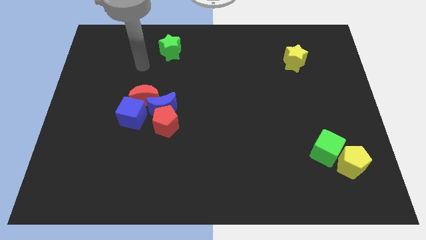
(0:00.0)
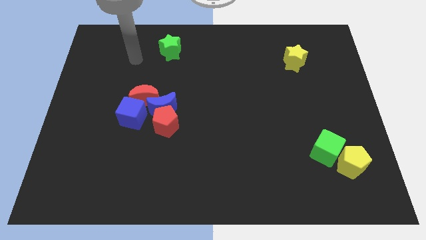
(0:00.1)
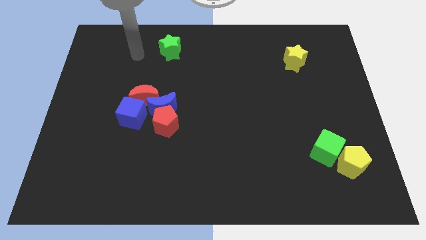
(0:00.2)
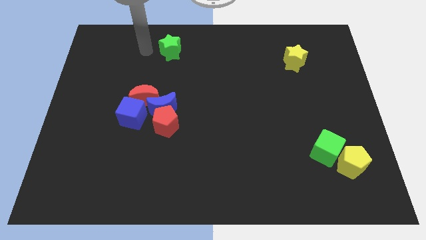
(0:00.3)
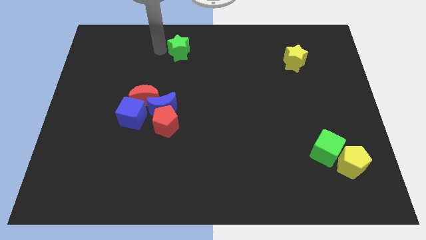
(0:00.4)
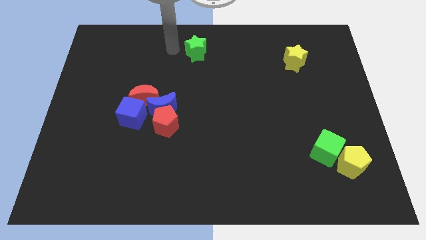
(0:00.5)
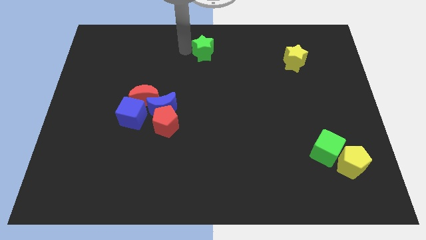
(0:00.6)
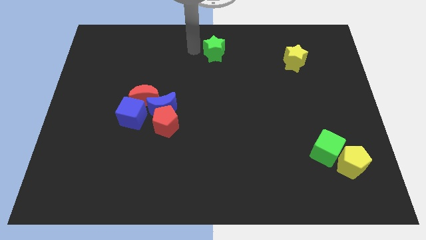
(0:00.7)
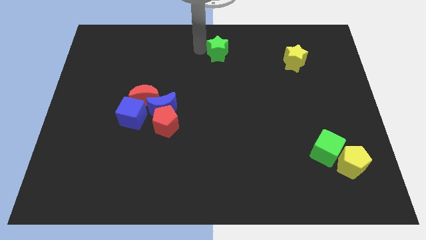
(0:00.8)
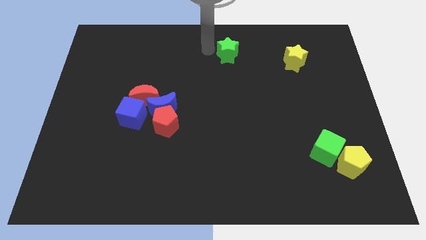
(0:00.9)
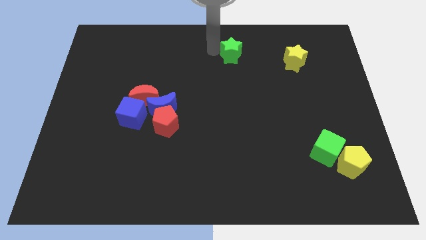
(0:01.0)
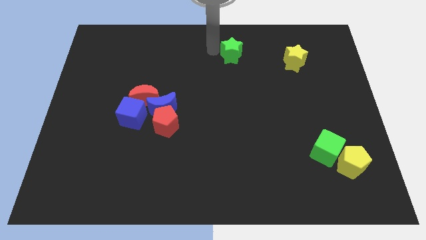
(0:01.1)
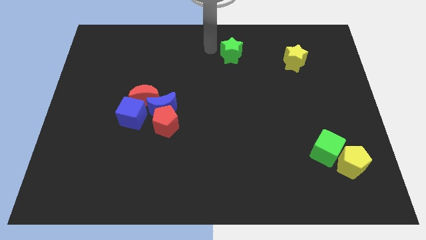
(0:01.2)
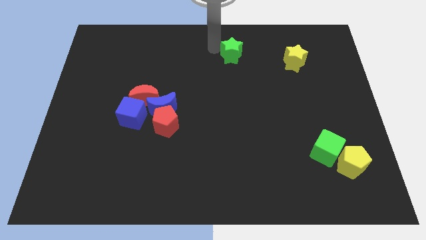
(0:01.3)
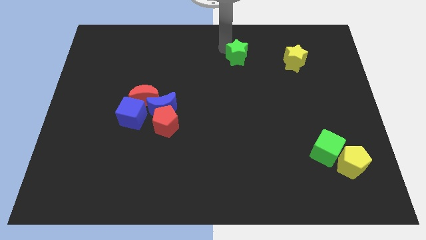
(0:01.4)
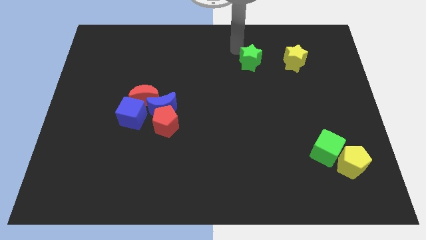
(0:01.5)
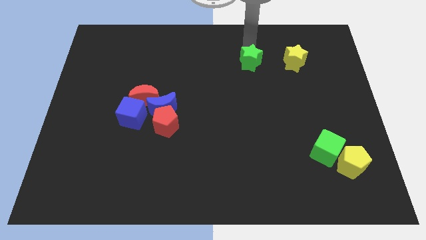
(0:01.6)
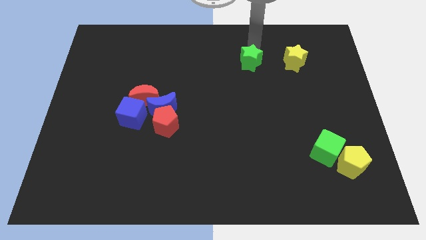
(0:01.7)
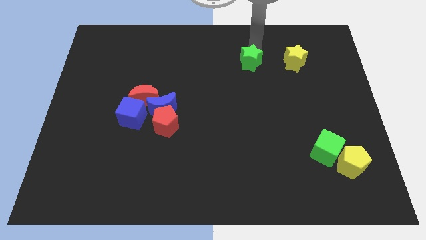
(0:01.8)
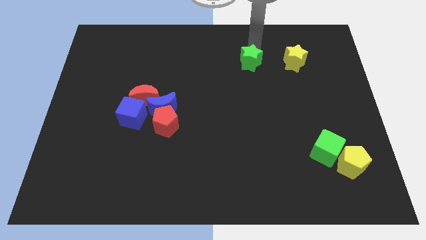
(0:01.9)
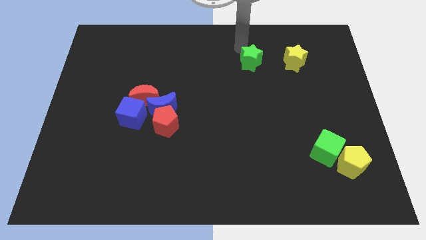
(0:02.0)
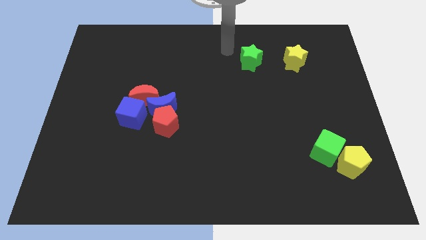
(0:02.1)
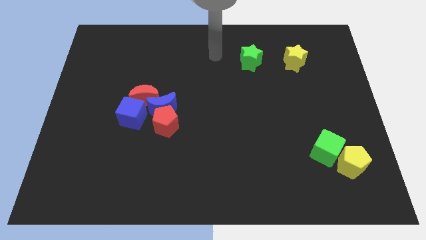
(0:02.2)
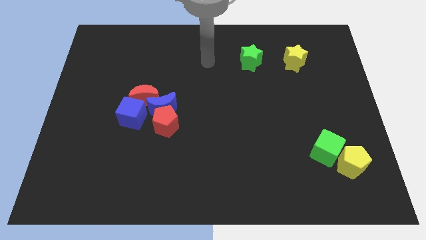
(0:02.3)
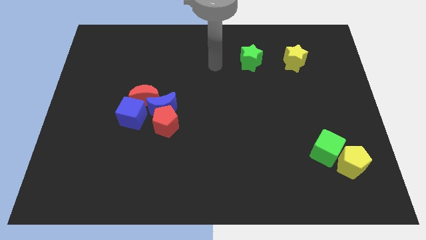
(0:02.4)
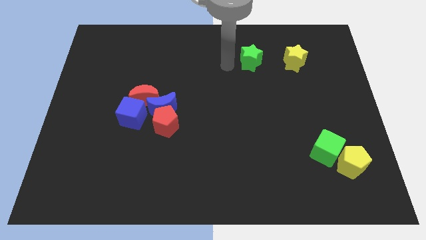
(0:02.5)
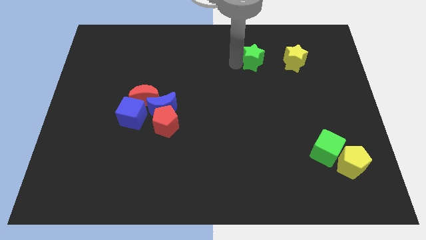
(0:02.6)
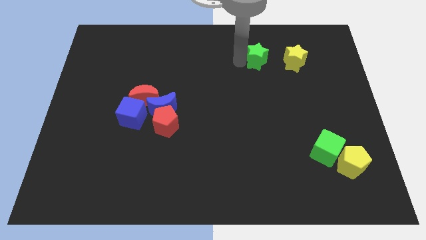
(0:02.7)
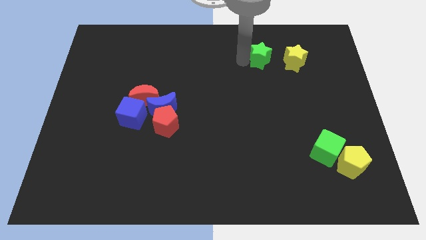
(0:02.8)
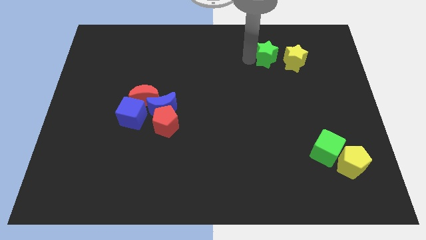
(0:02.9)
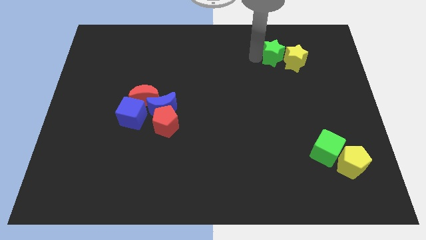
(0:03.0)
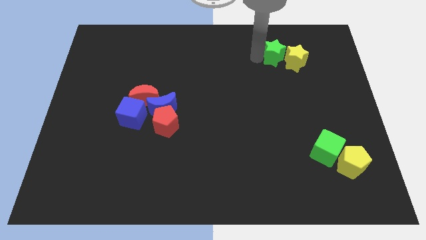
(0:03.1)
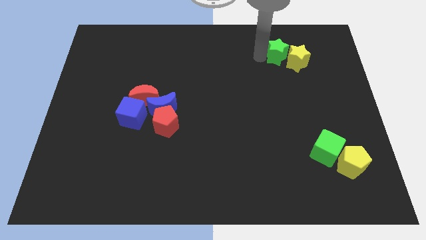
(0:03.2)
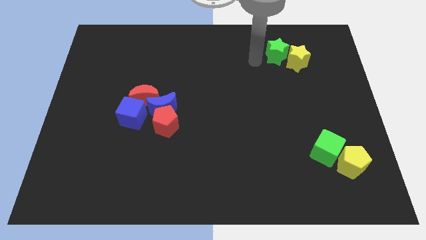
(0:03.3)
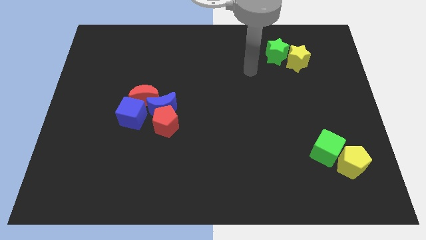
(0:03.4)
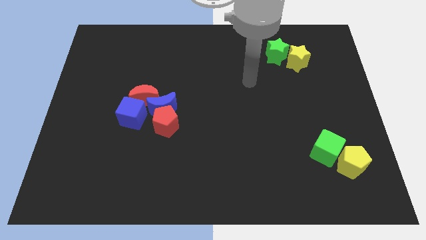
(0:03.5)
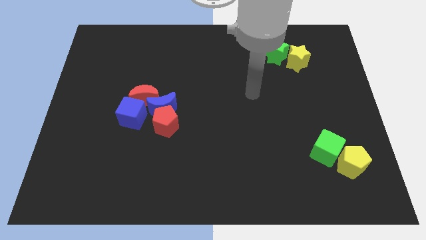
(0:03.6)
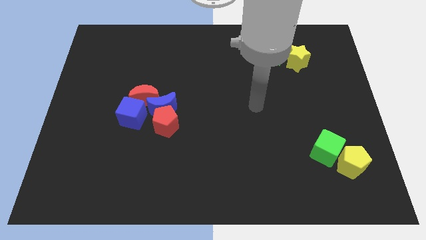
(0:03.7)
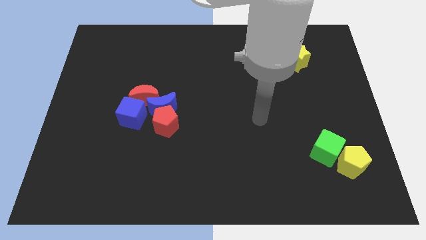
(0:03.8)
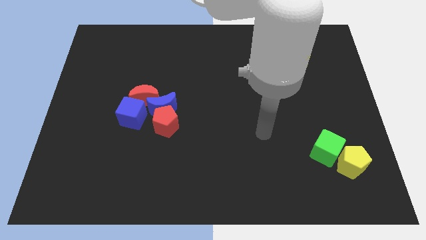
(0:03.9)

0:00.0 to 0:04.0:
move the green star close to the yellow star

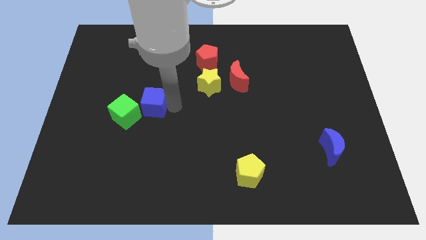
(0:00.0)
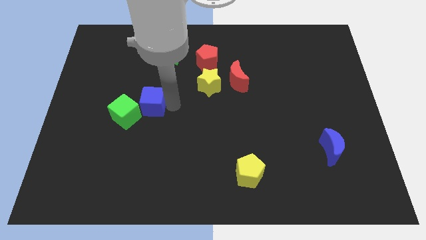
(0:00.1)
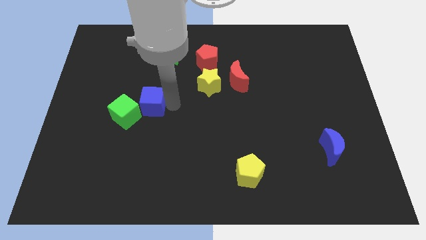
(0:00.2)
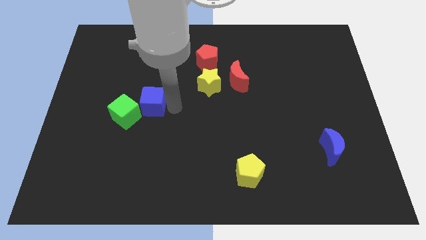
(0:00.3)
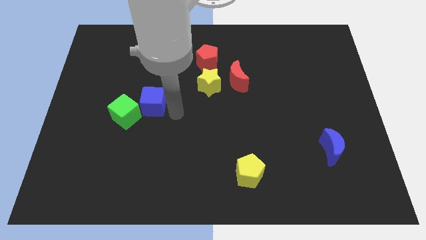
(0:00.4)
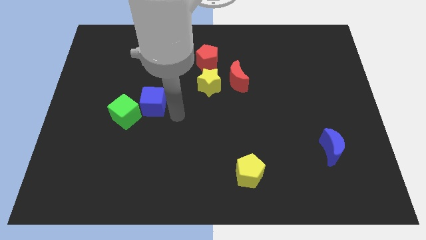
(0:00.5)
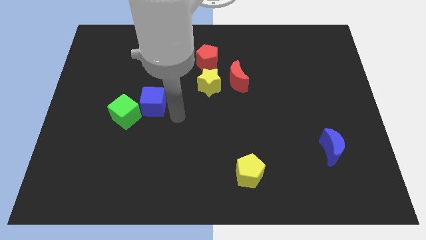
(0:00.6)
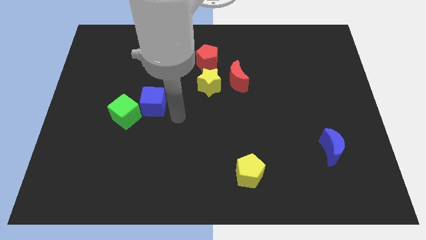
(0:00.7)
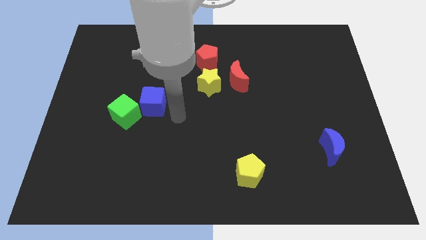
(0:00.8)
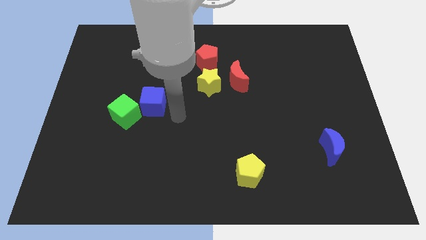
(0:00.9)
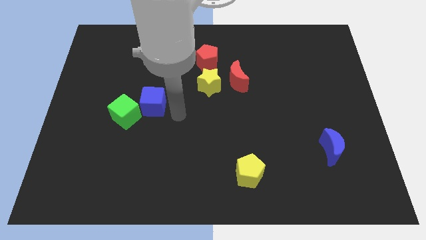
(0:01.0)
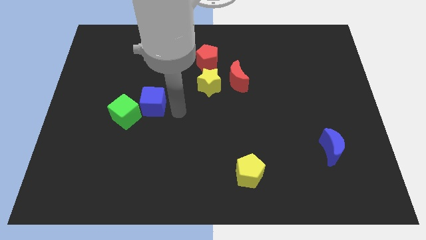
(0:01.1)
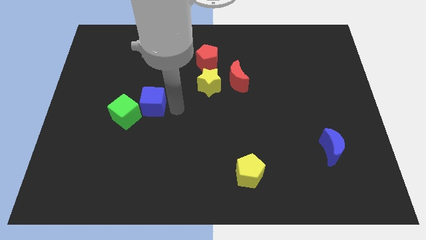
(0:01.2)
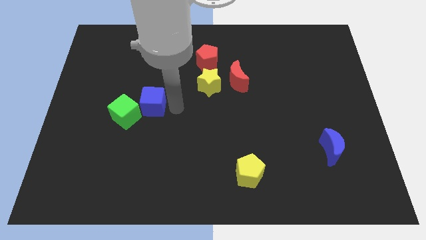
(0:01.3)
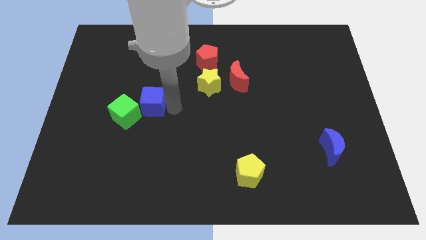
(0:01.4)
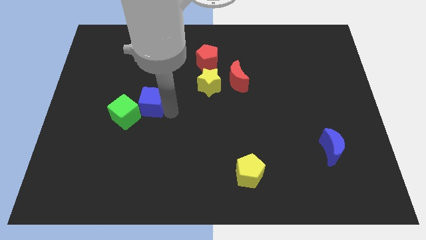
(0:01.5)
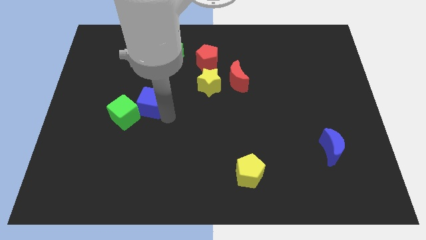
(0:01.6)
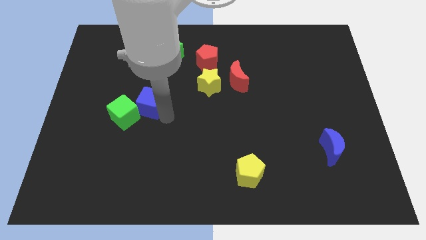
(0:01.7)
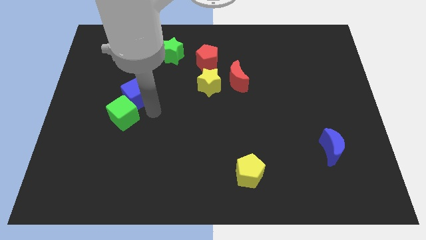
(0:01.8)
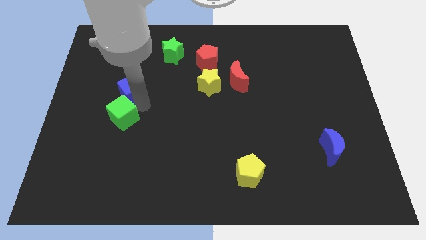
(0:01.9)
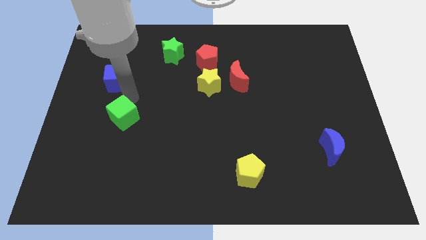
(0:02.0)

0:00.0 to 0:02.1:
put the blue cube above the green cube

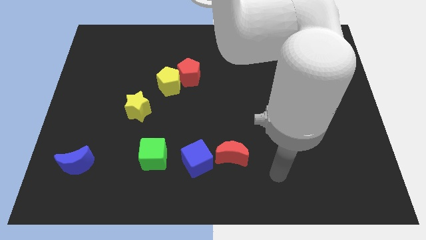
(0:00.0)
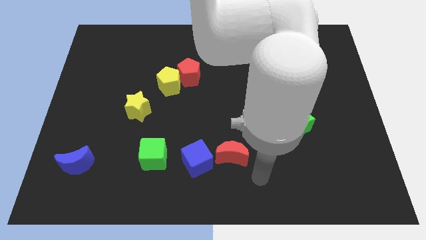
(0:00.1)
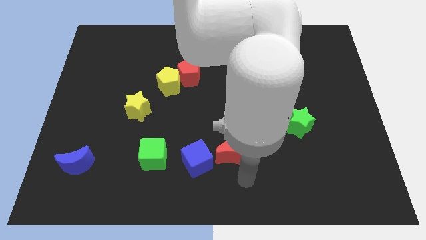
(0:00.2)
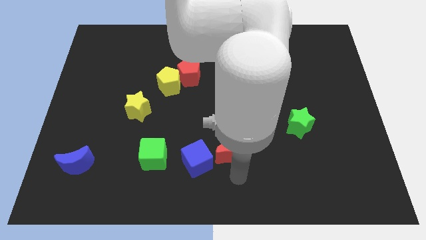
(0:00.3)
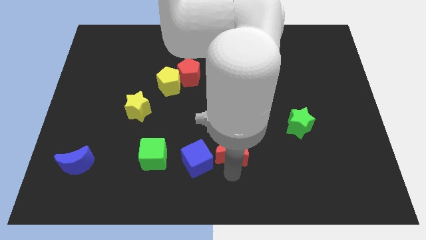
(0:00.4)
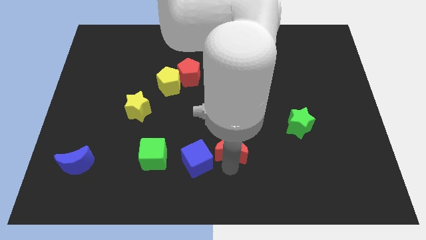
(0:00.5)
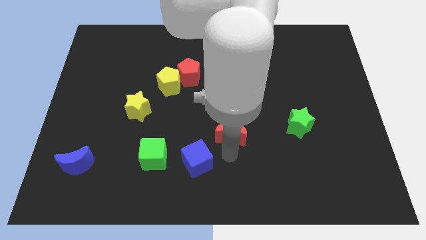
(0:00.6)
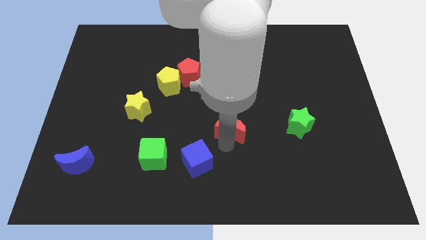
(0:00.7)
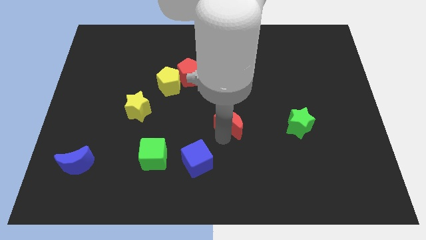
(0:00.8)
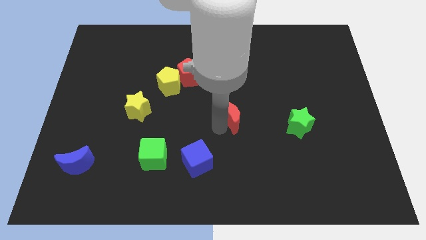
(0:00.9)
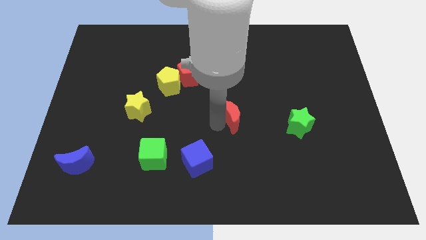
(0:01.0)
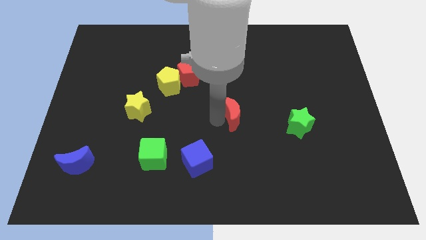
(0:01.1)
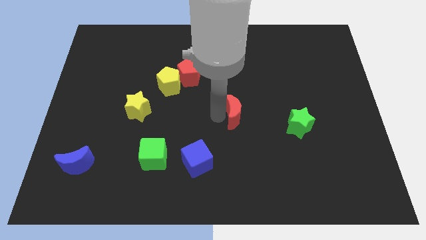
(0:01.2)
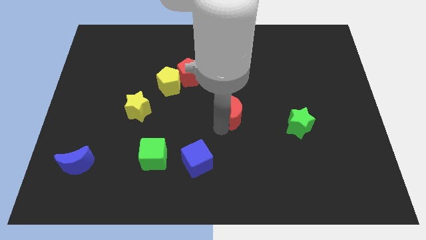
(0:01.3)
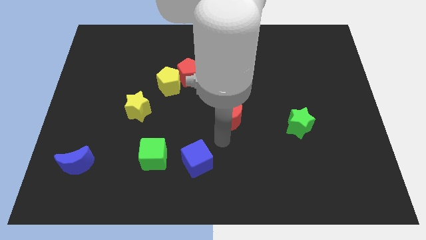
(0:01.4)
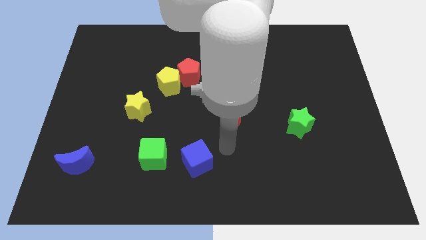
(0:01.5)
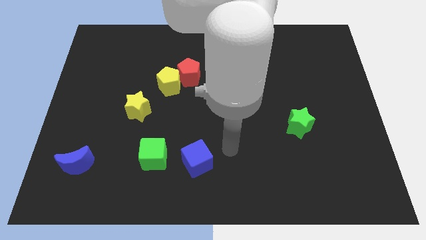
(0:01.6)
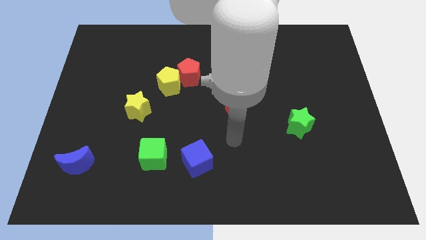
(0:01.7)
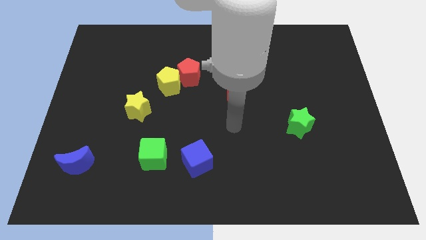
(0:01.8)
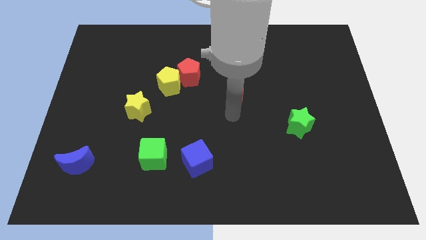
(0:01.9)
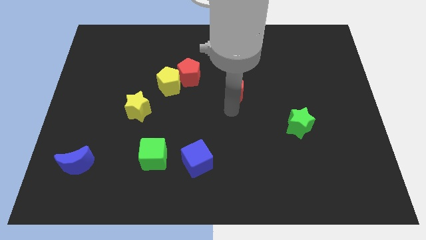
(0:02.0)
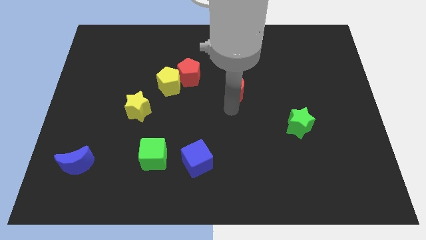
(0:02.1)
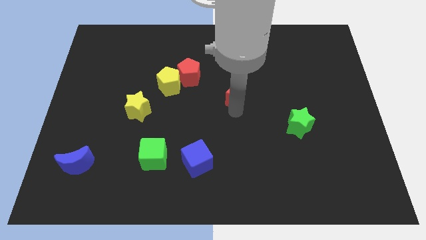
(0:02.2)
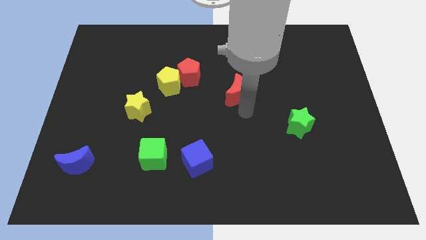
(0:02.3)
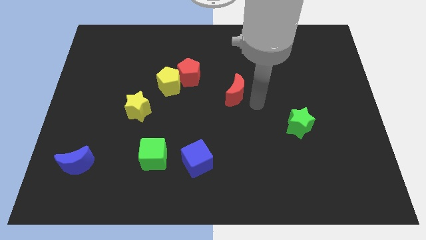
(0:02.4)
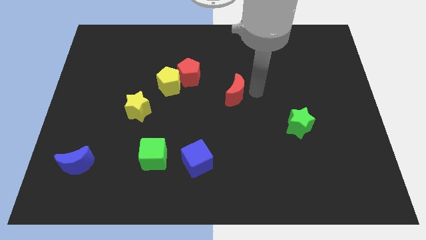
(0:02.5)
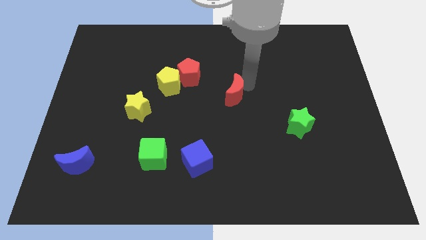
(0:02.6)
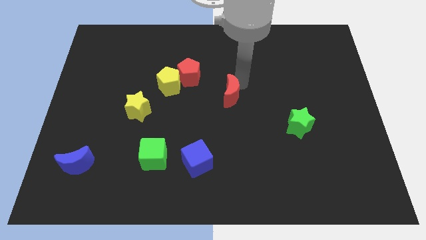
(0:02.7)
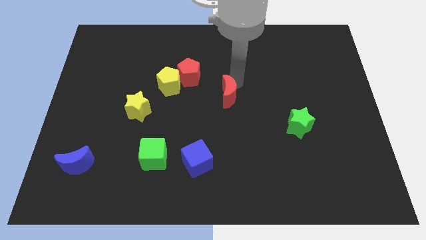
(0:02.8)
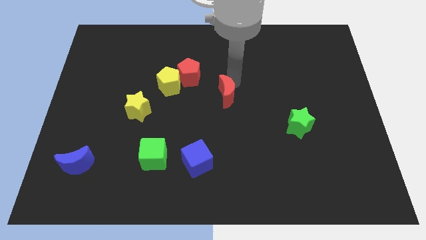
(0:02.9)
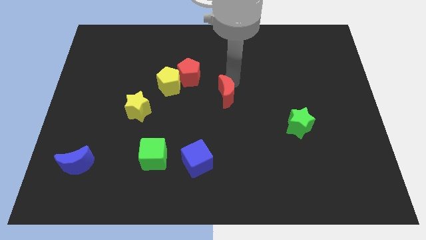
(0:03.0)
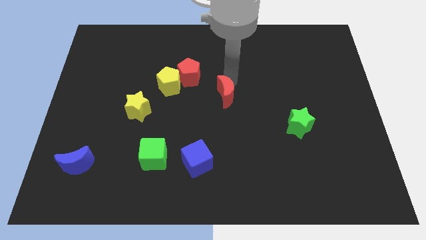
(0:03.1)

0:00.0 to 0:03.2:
place the red crescent diagonally in between the red pentagon and green star
